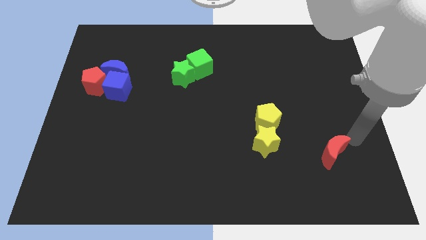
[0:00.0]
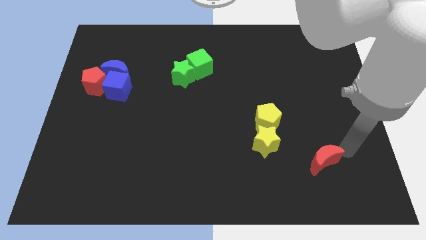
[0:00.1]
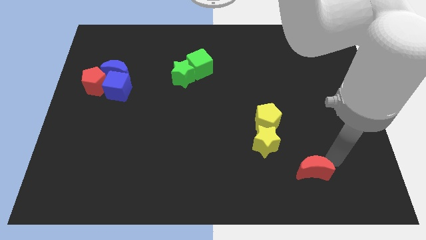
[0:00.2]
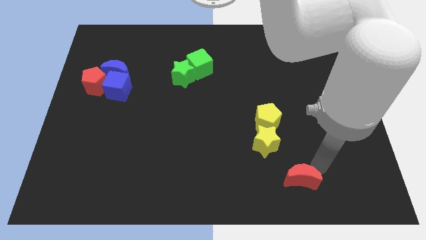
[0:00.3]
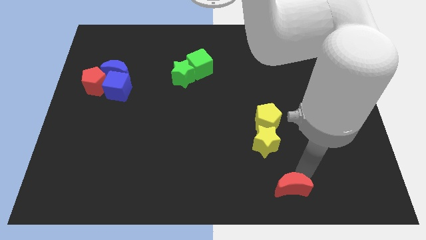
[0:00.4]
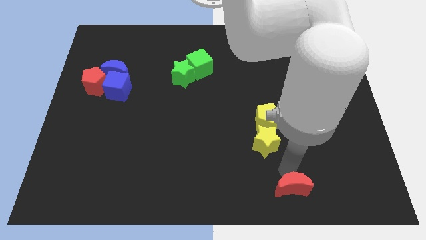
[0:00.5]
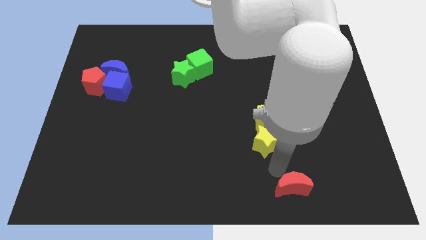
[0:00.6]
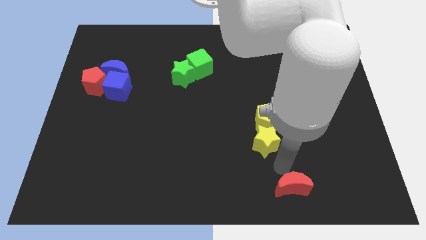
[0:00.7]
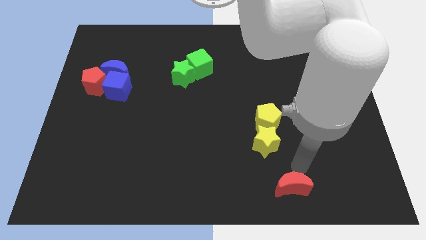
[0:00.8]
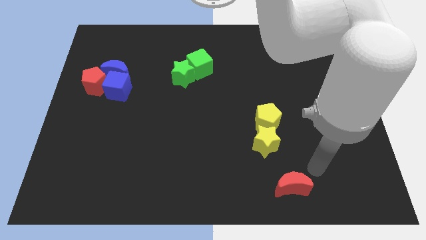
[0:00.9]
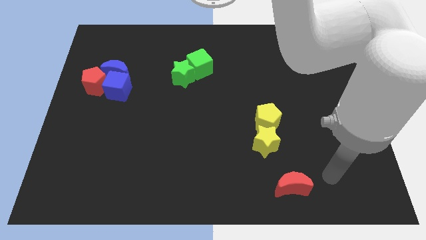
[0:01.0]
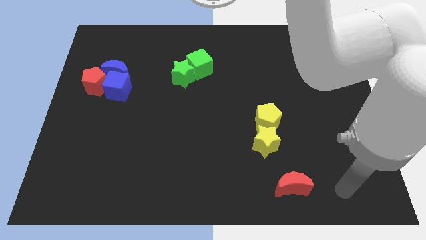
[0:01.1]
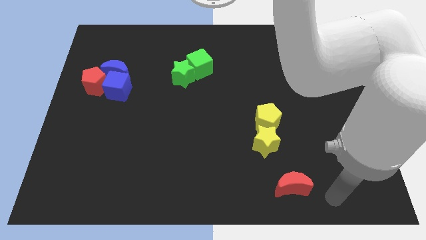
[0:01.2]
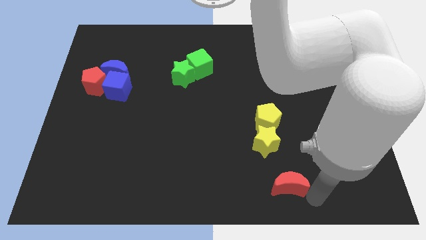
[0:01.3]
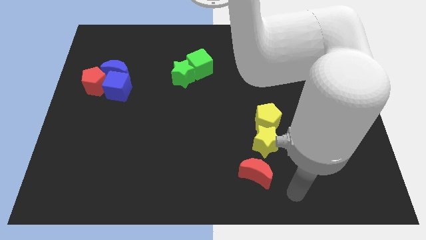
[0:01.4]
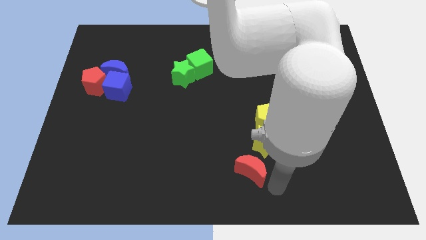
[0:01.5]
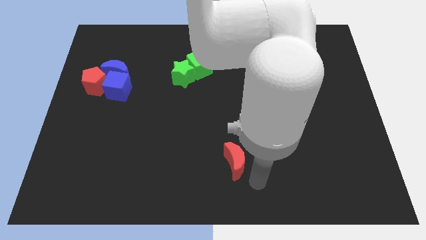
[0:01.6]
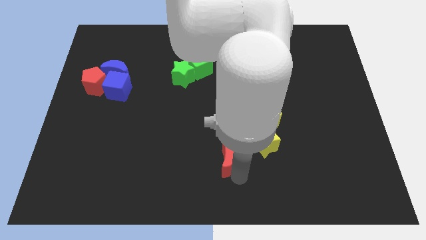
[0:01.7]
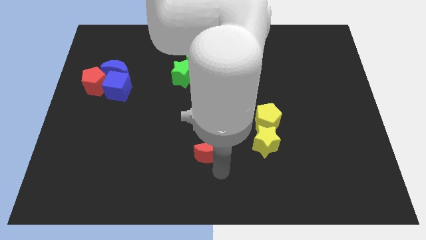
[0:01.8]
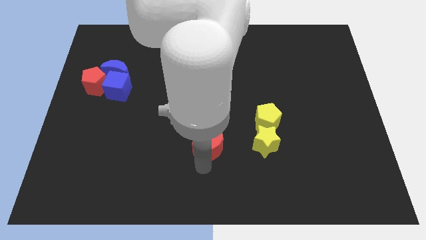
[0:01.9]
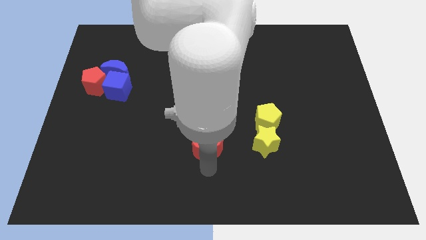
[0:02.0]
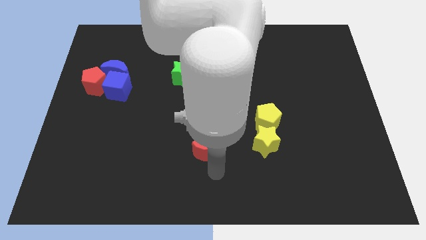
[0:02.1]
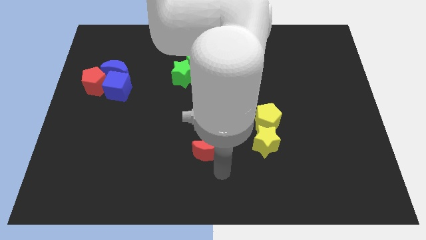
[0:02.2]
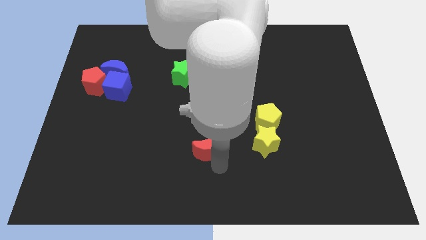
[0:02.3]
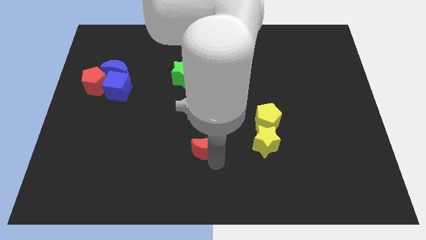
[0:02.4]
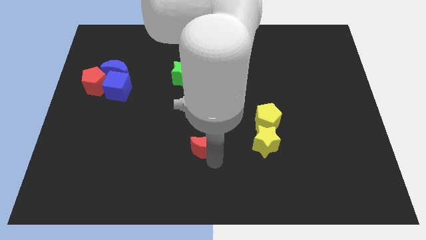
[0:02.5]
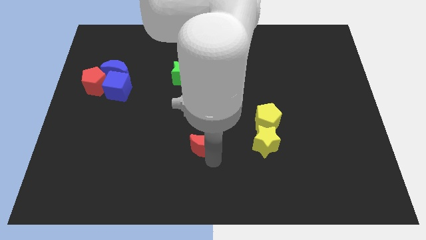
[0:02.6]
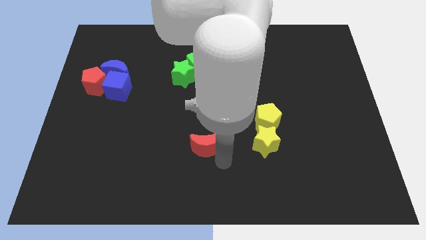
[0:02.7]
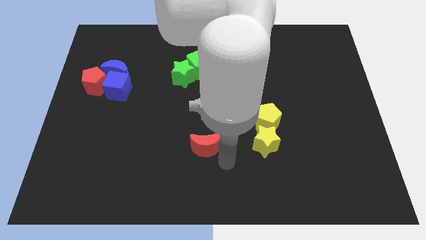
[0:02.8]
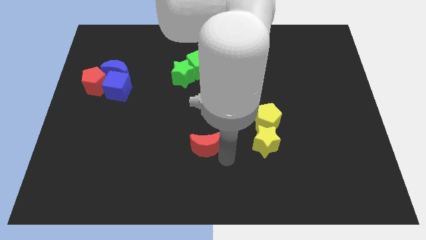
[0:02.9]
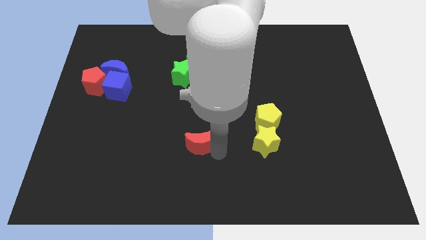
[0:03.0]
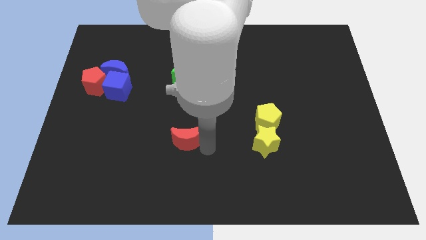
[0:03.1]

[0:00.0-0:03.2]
place the red crescent horizontally to the left side of the yellow star

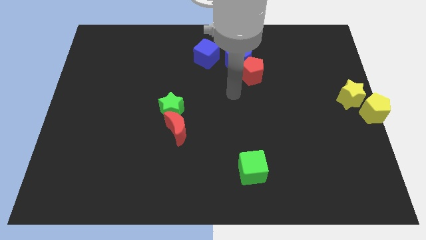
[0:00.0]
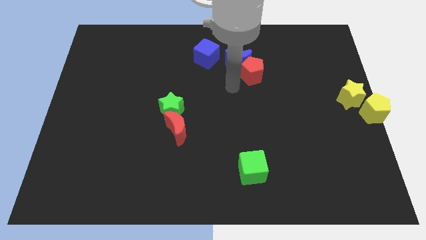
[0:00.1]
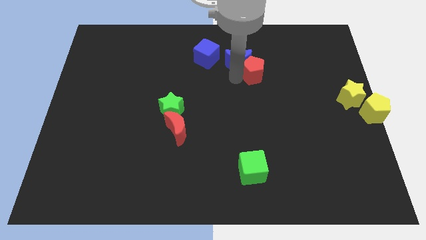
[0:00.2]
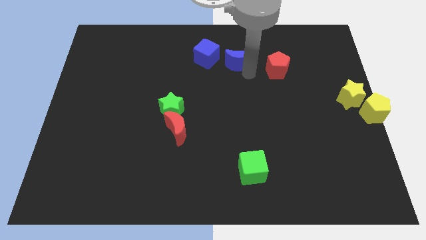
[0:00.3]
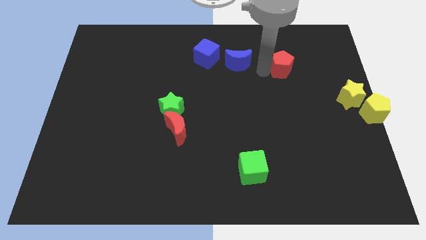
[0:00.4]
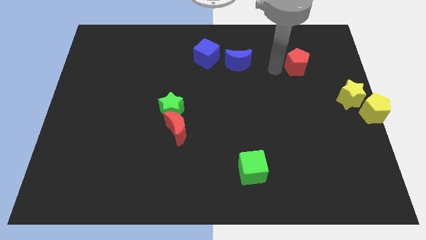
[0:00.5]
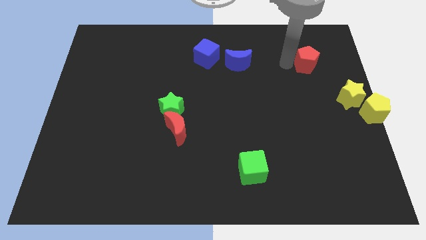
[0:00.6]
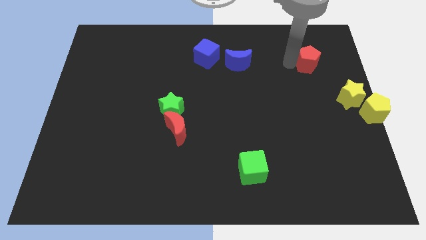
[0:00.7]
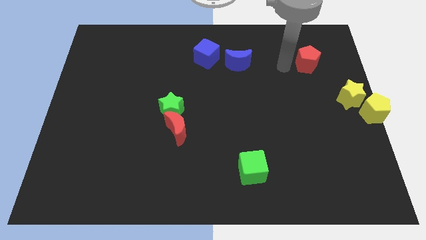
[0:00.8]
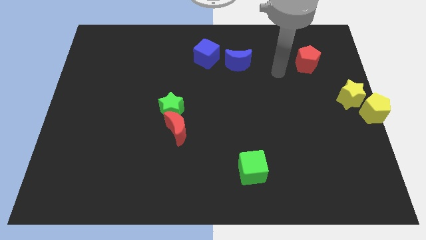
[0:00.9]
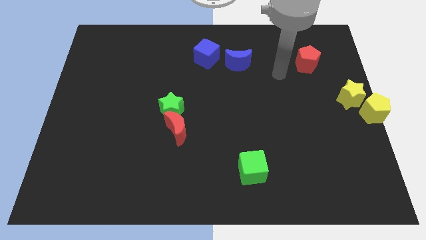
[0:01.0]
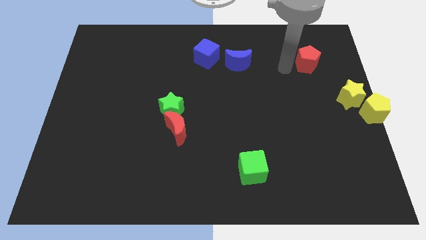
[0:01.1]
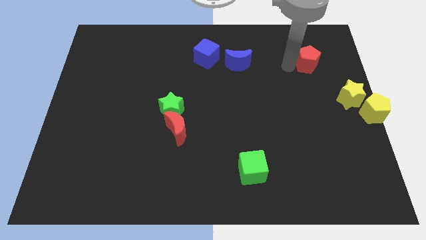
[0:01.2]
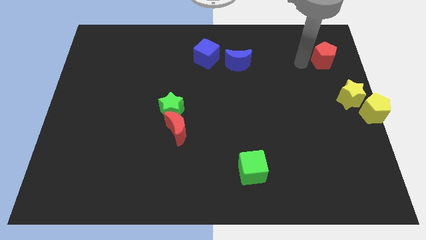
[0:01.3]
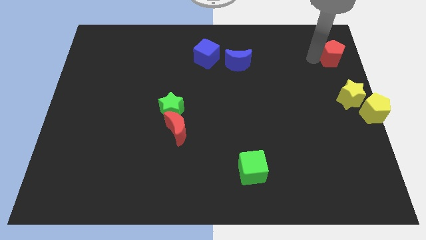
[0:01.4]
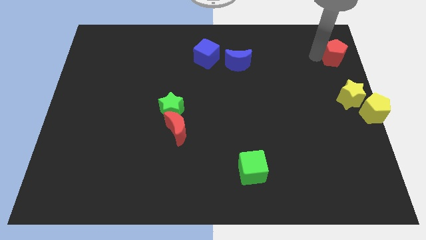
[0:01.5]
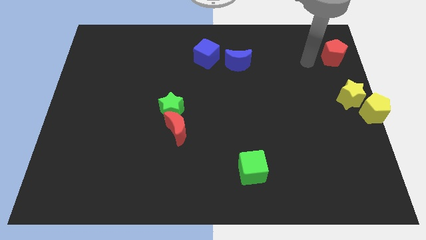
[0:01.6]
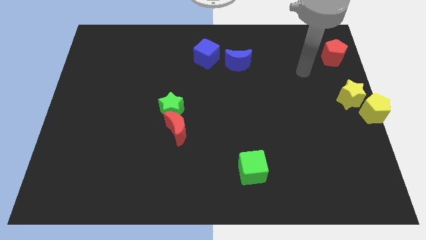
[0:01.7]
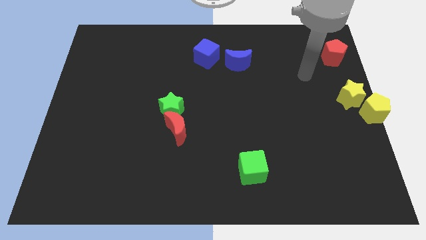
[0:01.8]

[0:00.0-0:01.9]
separate the red pentagon from the blue crescent

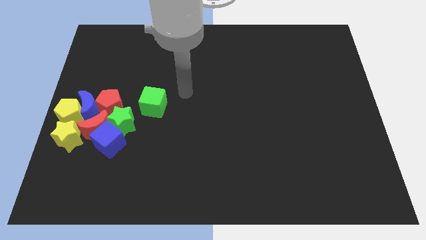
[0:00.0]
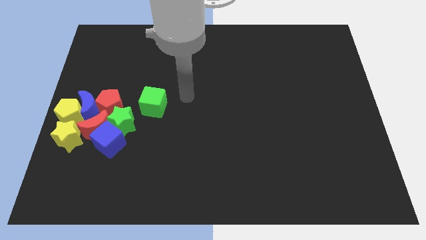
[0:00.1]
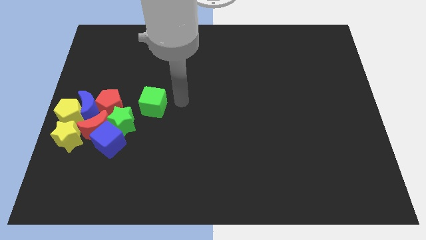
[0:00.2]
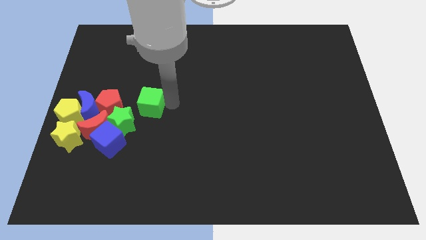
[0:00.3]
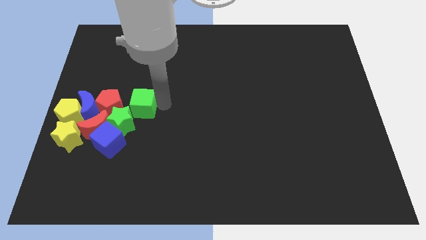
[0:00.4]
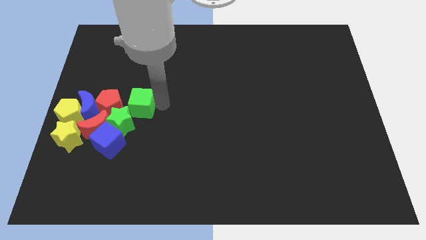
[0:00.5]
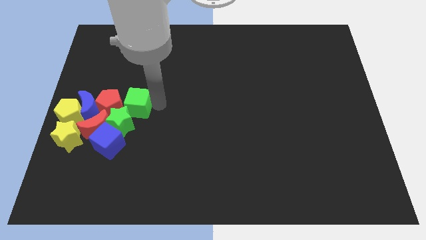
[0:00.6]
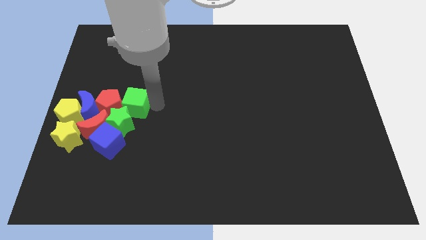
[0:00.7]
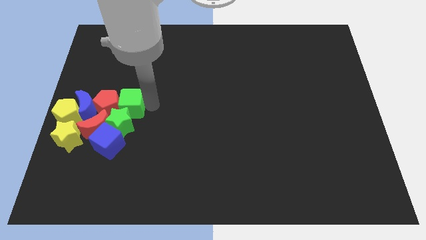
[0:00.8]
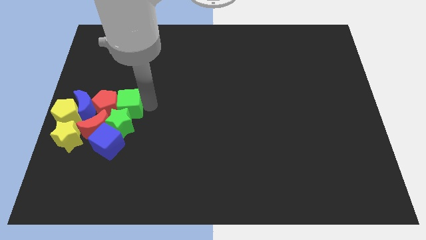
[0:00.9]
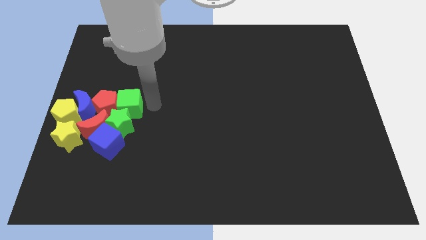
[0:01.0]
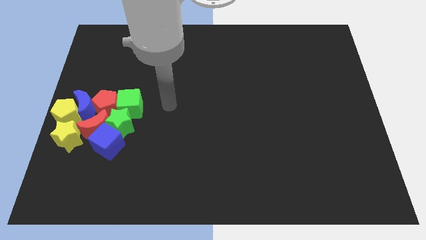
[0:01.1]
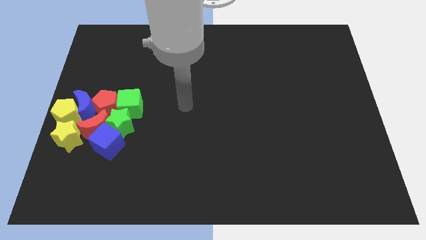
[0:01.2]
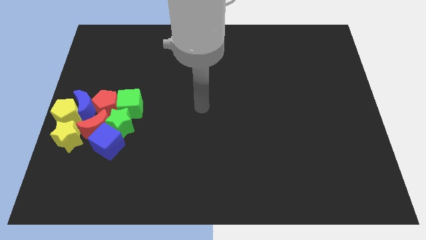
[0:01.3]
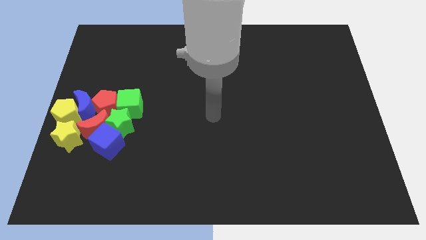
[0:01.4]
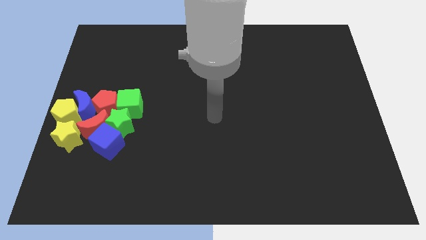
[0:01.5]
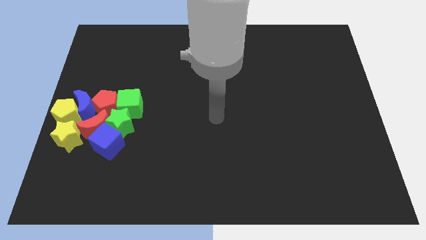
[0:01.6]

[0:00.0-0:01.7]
push the green cube towards the center left side of the board to form a group

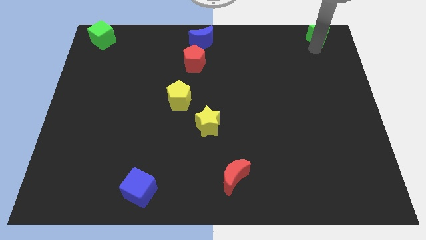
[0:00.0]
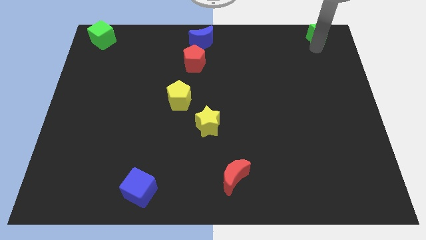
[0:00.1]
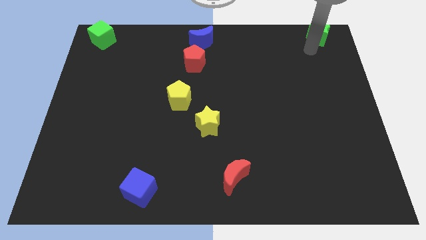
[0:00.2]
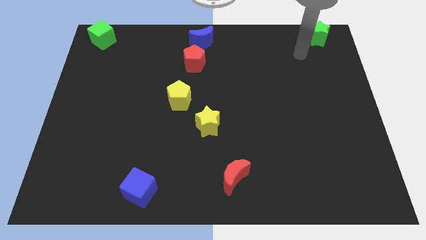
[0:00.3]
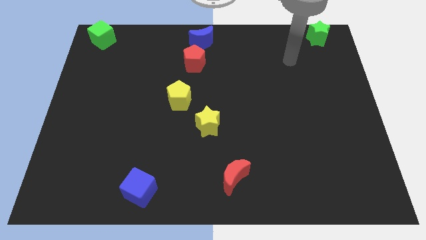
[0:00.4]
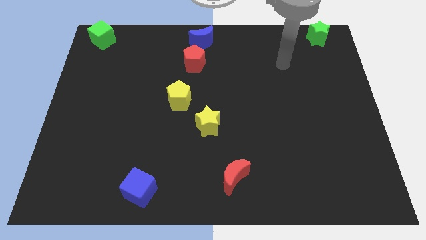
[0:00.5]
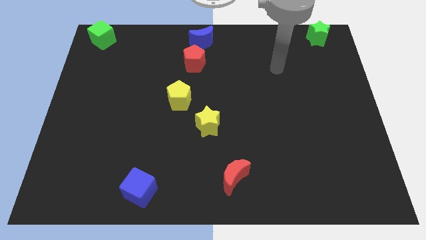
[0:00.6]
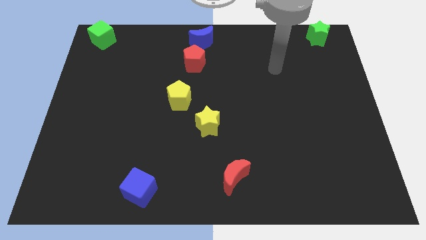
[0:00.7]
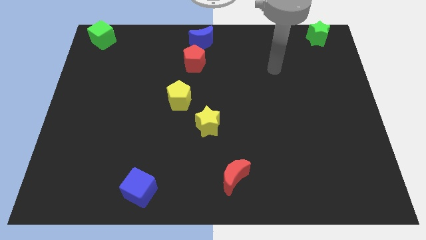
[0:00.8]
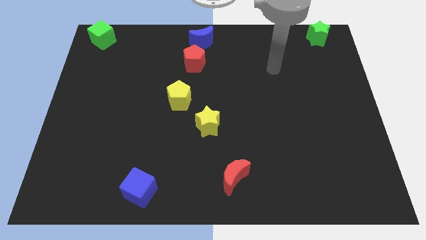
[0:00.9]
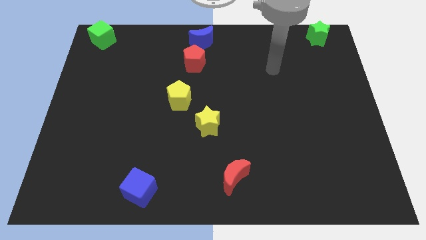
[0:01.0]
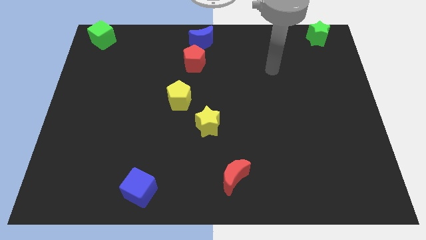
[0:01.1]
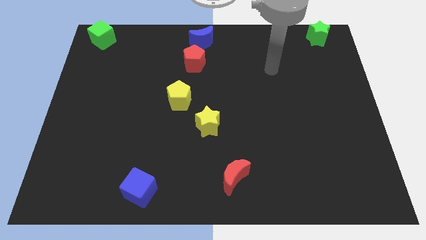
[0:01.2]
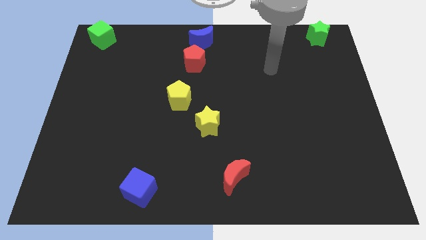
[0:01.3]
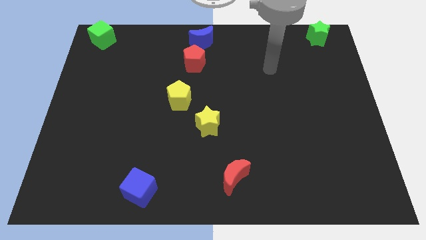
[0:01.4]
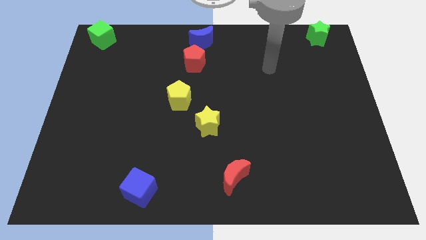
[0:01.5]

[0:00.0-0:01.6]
move your arm away from green star

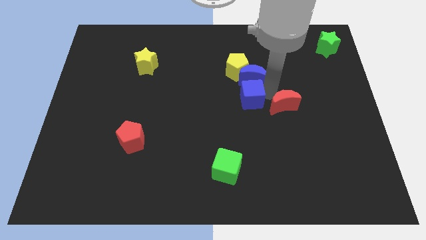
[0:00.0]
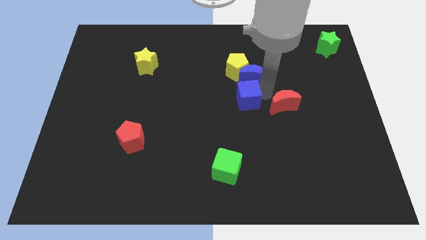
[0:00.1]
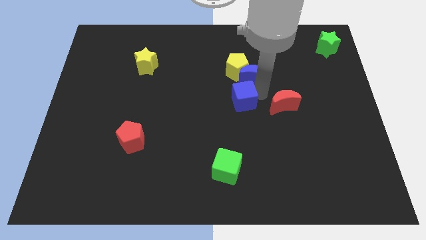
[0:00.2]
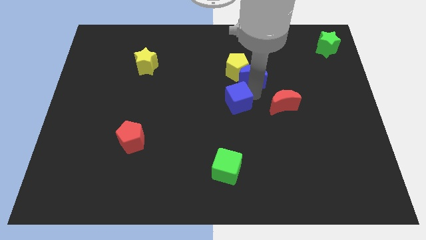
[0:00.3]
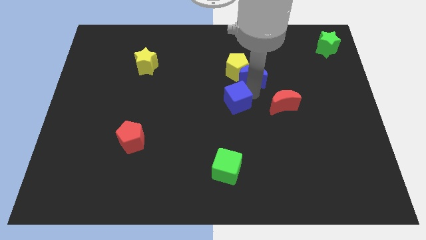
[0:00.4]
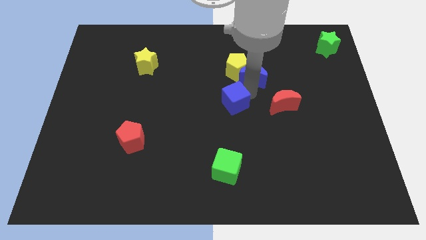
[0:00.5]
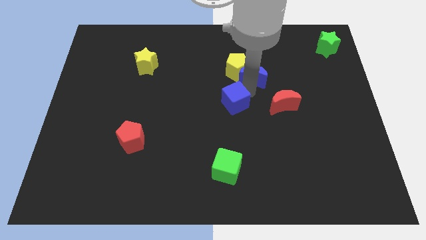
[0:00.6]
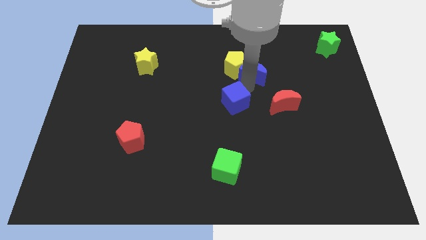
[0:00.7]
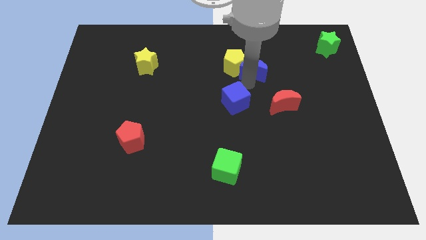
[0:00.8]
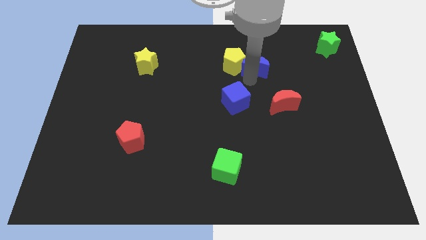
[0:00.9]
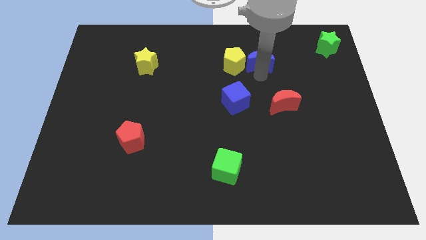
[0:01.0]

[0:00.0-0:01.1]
place the blue crescent to the right of the yellow pentagon
